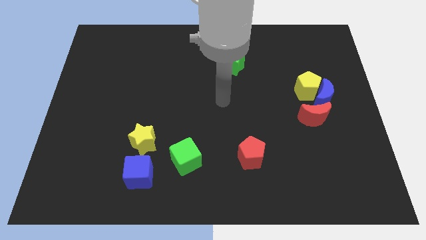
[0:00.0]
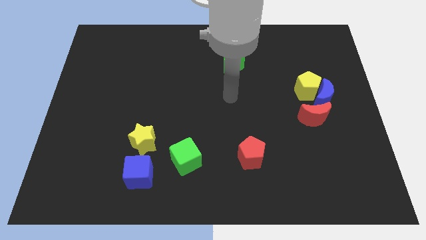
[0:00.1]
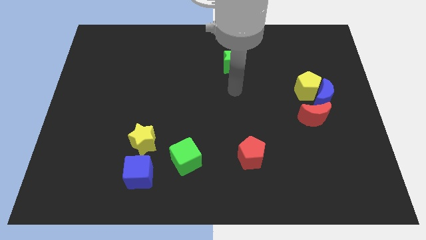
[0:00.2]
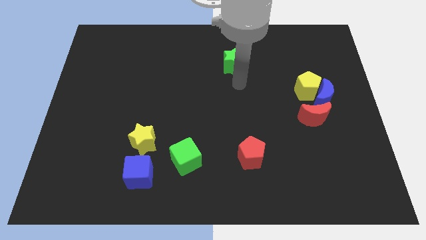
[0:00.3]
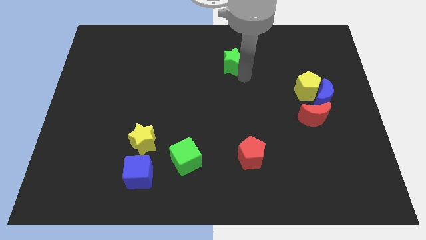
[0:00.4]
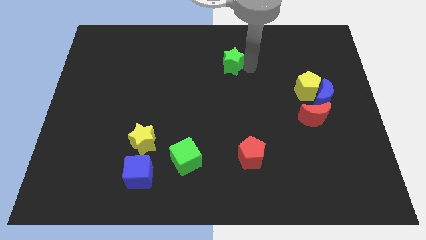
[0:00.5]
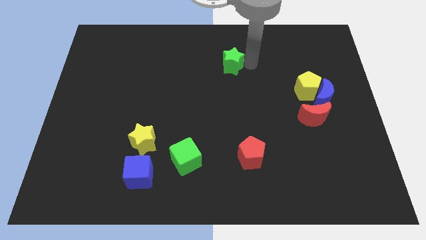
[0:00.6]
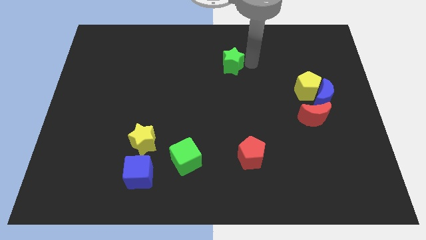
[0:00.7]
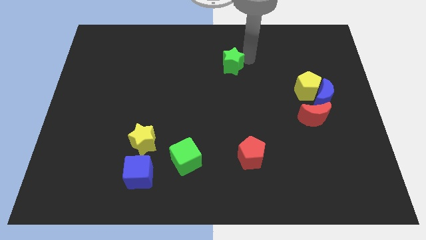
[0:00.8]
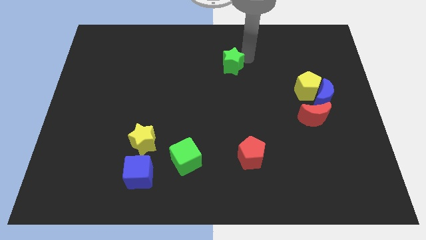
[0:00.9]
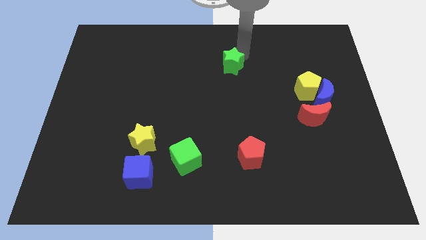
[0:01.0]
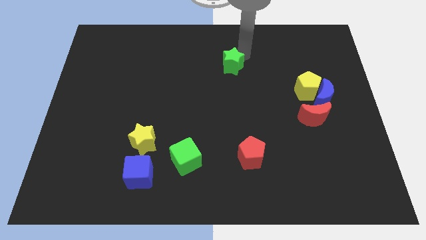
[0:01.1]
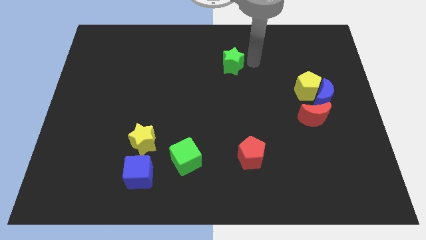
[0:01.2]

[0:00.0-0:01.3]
place your arm at the right of the green star

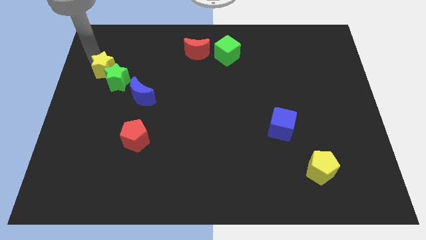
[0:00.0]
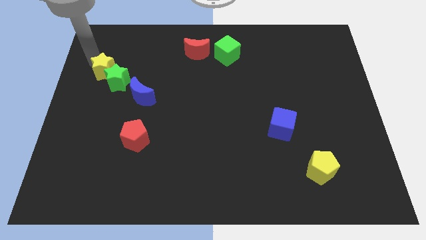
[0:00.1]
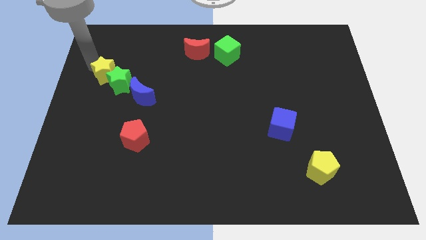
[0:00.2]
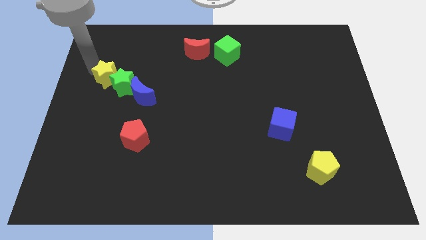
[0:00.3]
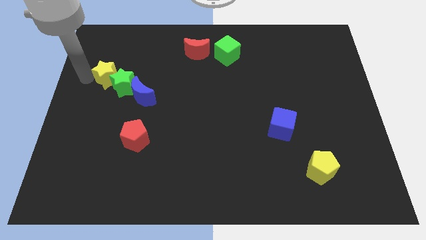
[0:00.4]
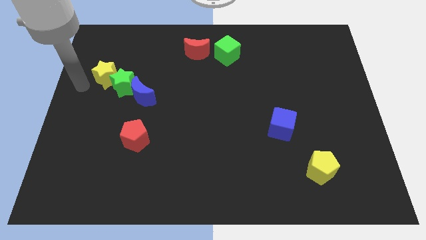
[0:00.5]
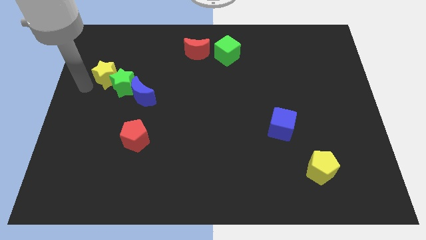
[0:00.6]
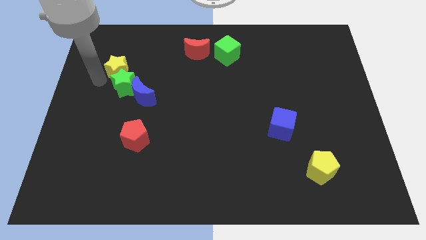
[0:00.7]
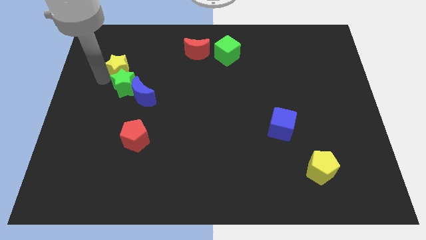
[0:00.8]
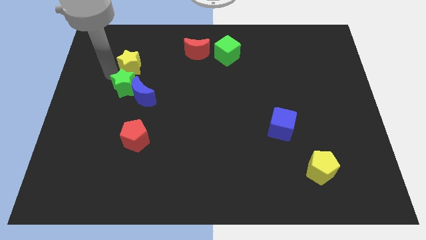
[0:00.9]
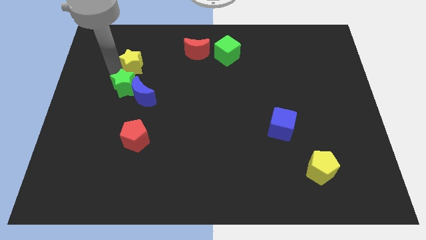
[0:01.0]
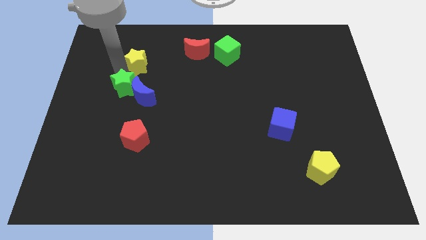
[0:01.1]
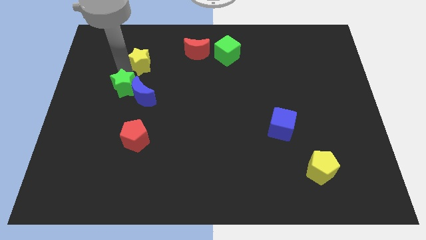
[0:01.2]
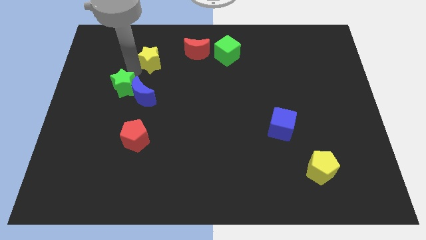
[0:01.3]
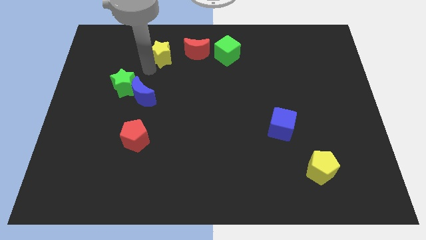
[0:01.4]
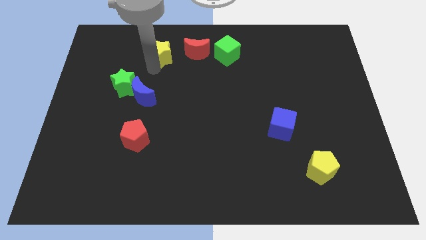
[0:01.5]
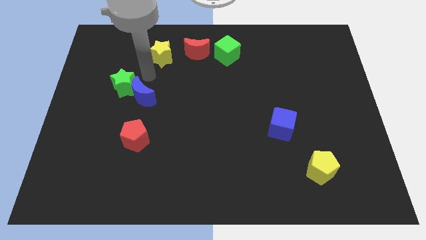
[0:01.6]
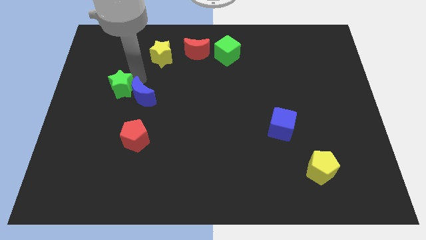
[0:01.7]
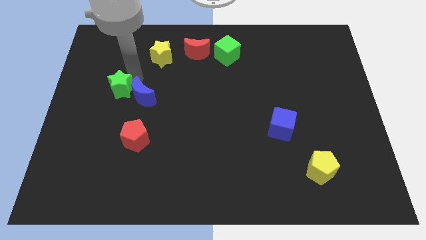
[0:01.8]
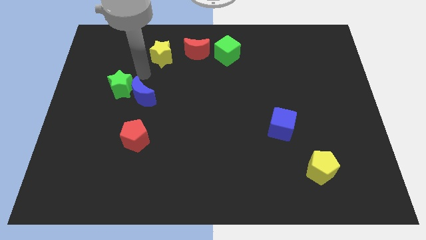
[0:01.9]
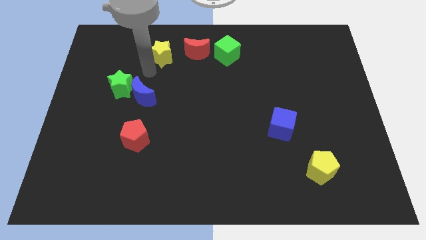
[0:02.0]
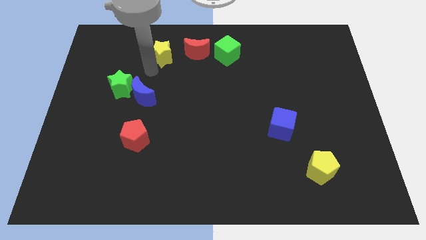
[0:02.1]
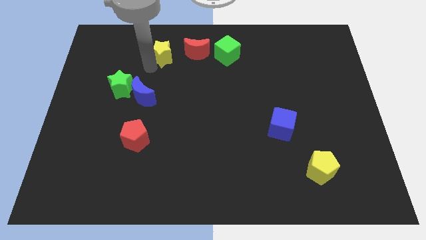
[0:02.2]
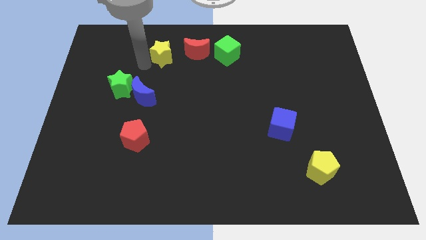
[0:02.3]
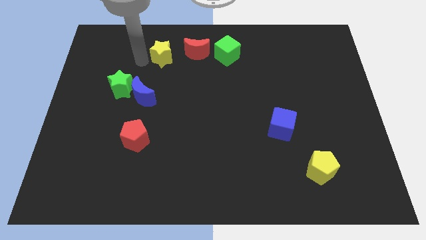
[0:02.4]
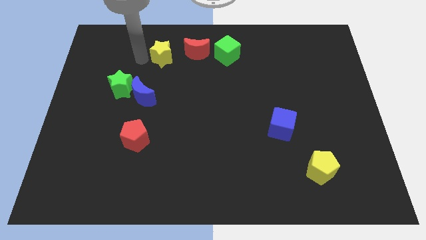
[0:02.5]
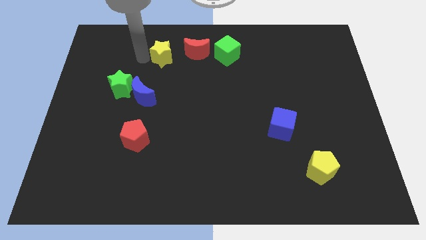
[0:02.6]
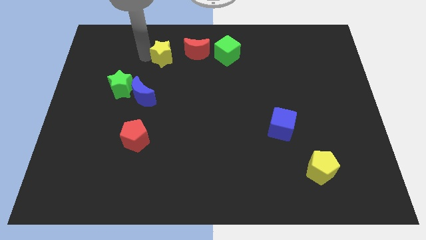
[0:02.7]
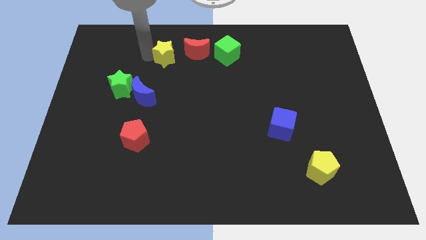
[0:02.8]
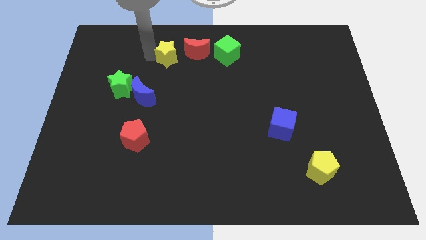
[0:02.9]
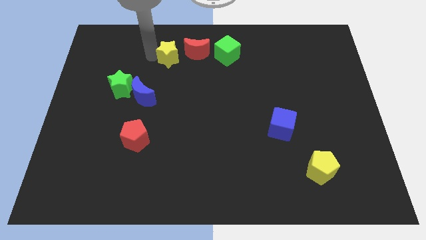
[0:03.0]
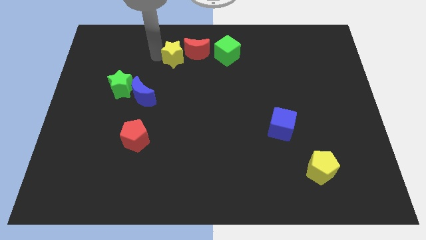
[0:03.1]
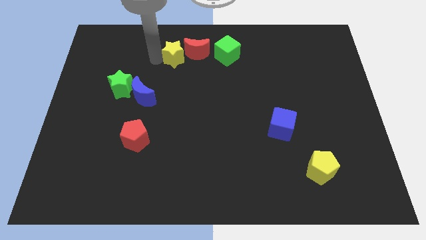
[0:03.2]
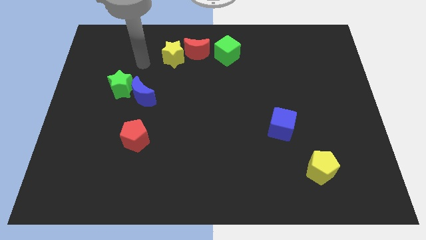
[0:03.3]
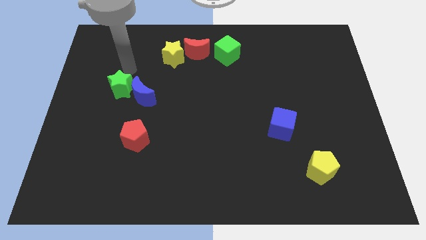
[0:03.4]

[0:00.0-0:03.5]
move the yellow star left to the red crescent

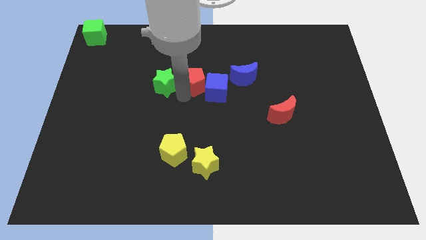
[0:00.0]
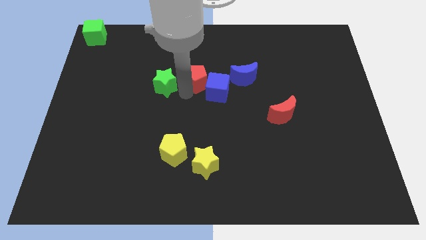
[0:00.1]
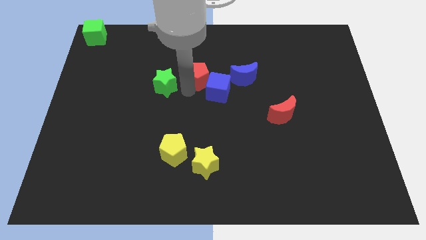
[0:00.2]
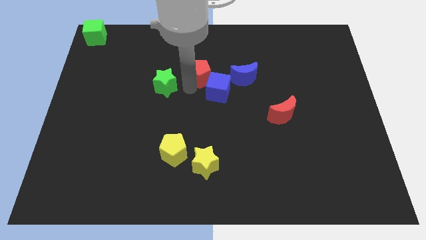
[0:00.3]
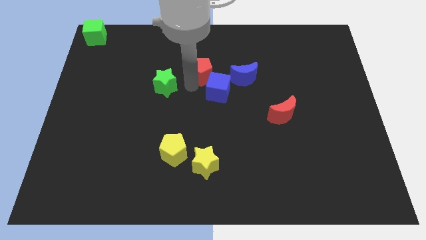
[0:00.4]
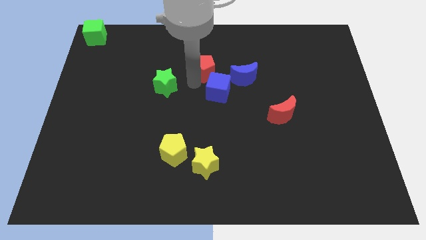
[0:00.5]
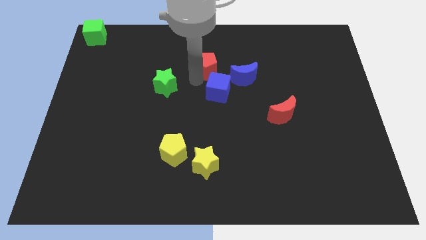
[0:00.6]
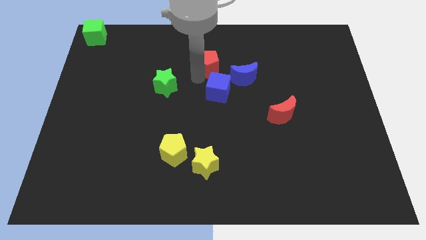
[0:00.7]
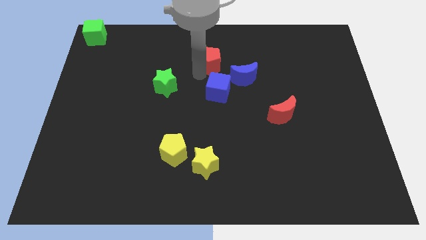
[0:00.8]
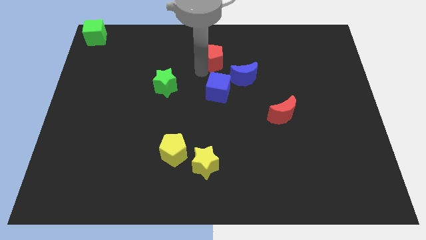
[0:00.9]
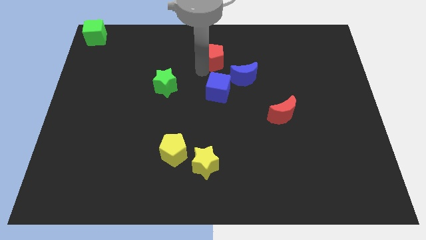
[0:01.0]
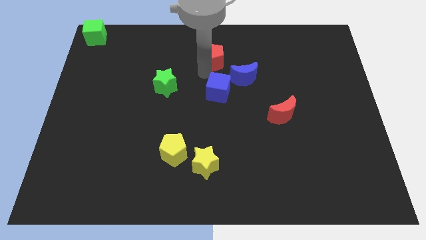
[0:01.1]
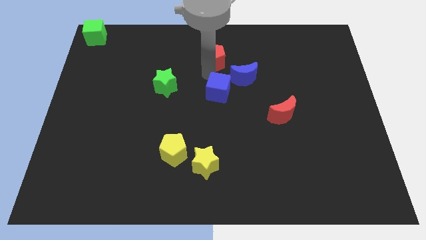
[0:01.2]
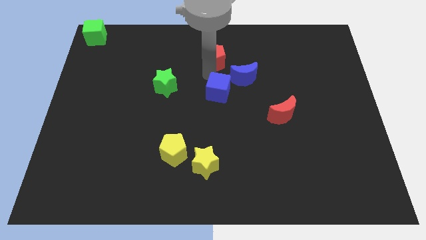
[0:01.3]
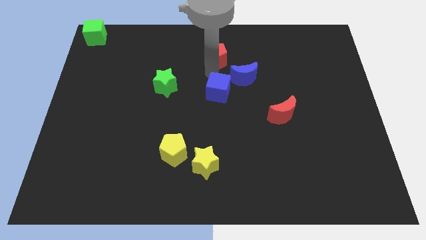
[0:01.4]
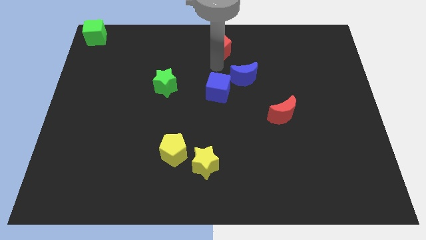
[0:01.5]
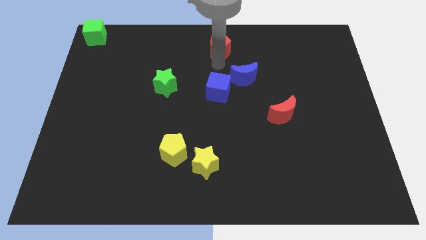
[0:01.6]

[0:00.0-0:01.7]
put the red pentagon above the blue moon

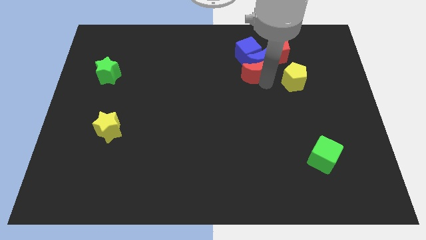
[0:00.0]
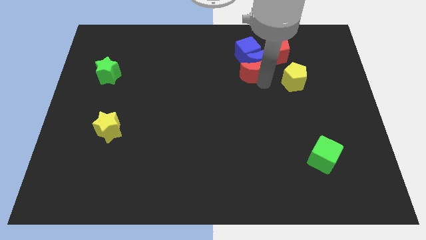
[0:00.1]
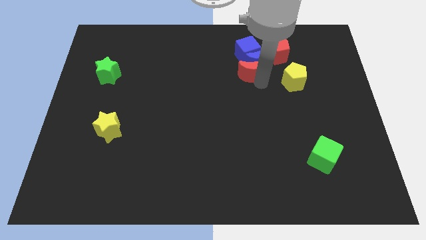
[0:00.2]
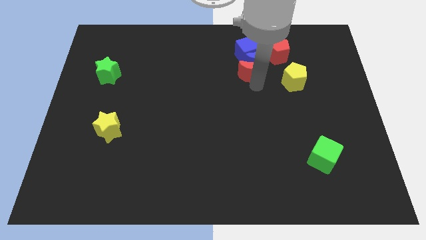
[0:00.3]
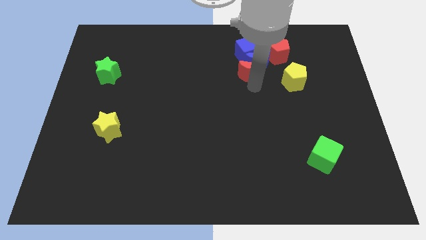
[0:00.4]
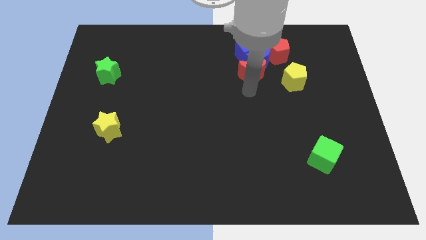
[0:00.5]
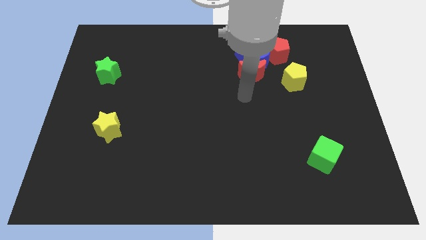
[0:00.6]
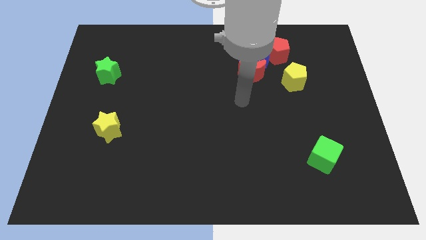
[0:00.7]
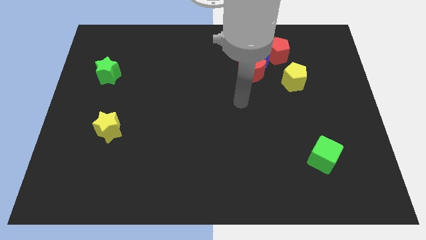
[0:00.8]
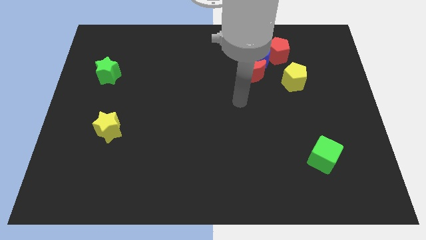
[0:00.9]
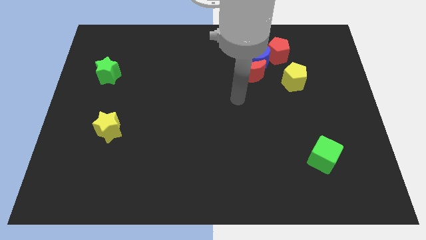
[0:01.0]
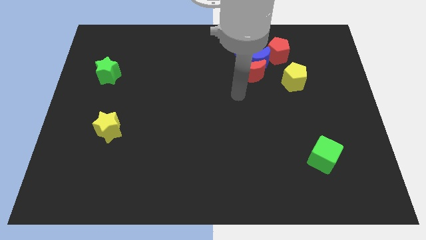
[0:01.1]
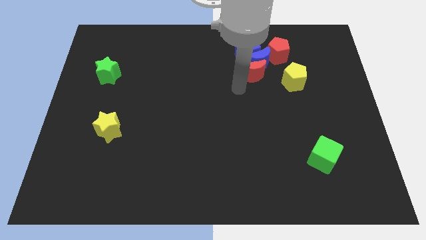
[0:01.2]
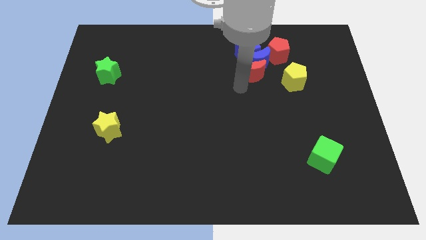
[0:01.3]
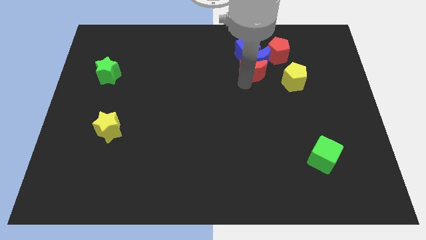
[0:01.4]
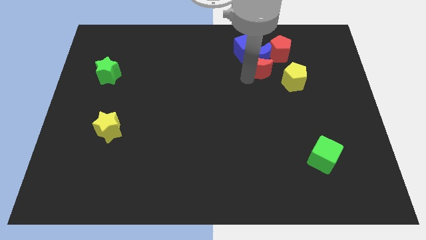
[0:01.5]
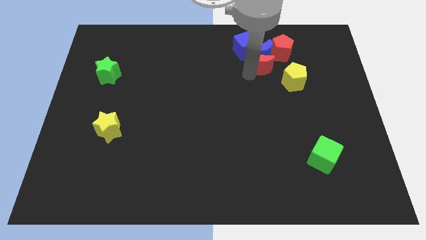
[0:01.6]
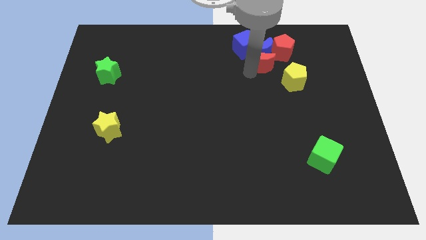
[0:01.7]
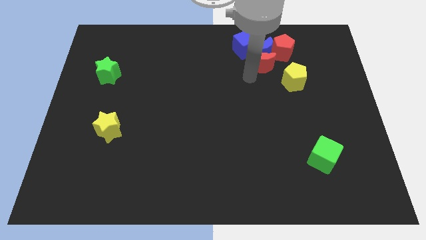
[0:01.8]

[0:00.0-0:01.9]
push the red crescent along with blue crescent

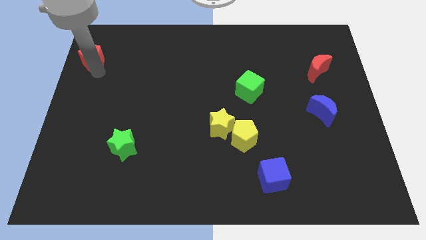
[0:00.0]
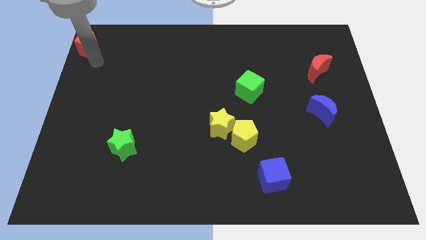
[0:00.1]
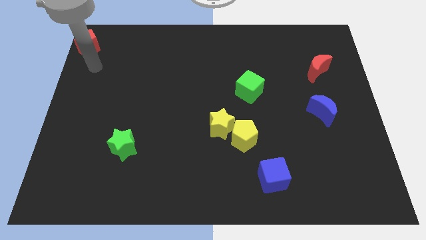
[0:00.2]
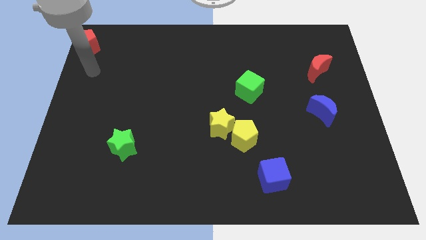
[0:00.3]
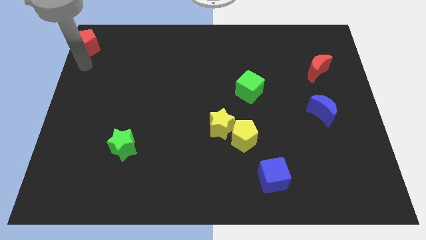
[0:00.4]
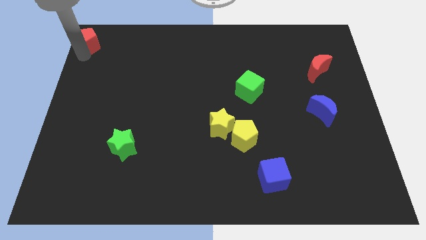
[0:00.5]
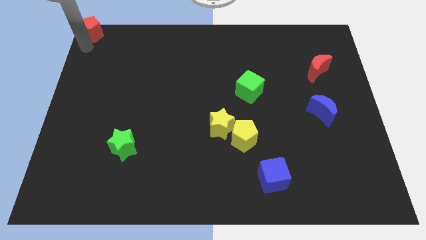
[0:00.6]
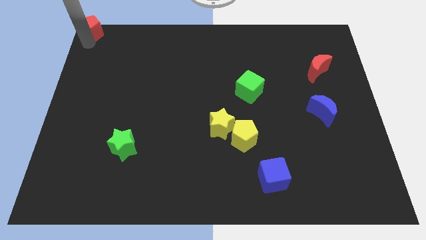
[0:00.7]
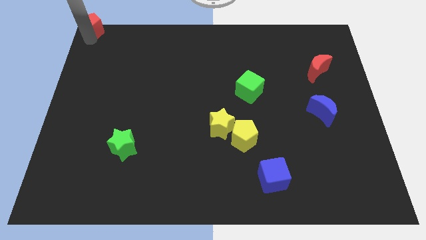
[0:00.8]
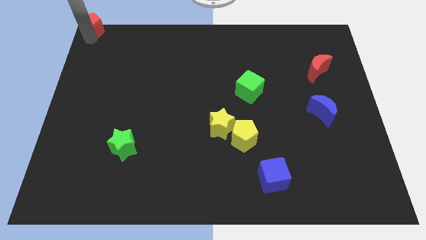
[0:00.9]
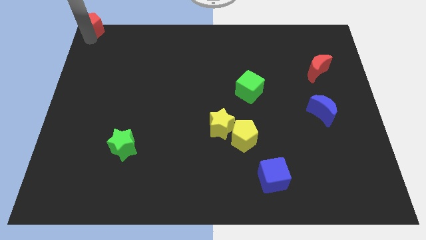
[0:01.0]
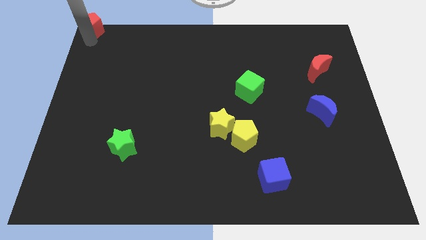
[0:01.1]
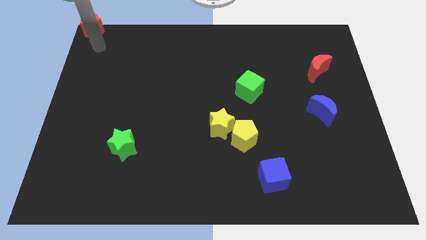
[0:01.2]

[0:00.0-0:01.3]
place the red pentagon to the top left corner of the board
